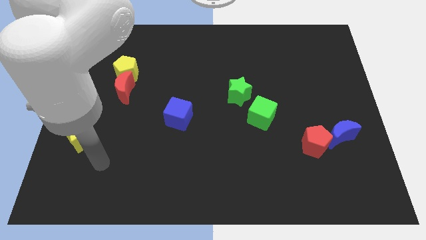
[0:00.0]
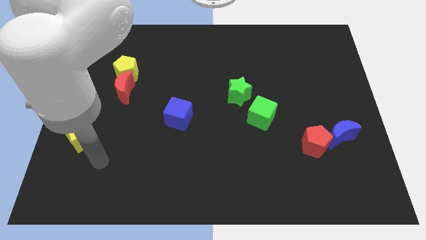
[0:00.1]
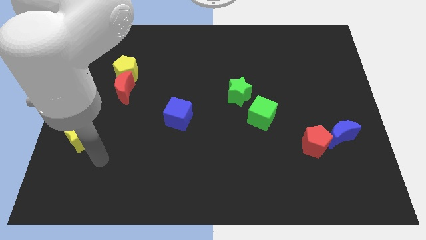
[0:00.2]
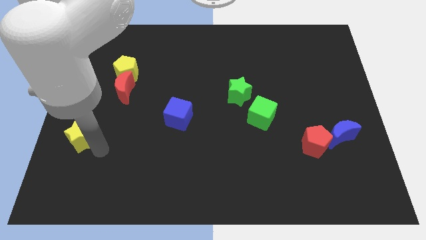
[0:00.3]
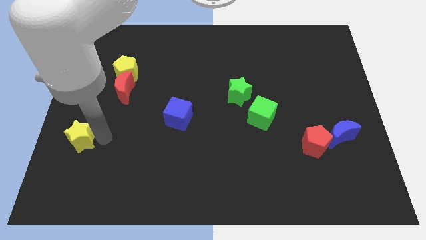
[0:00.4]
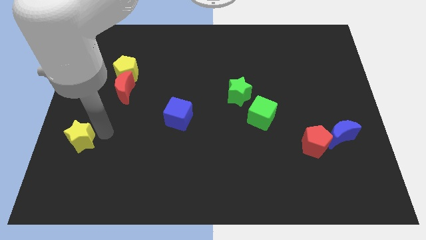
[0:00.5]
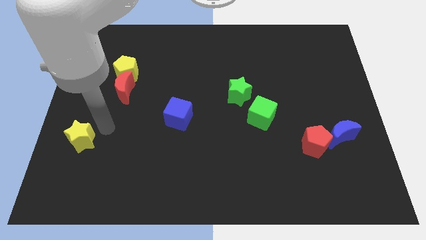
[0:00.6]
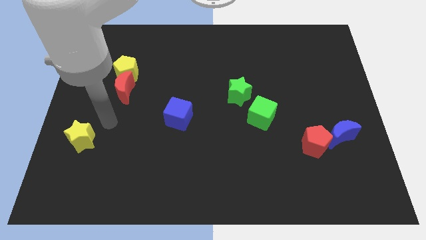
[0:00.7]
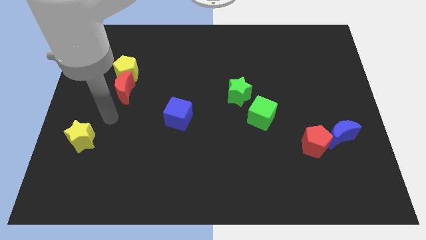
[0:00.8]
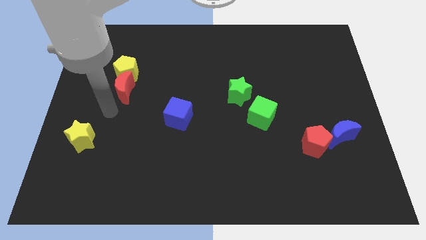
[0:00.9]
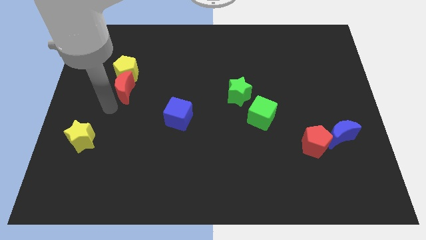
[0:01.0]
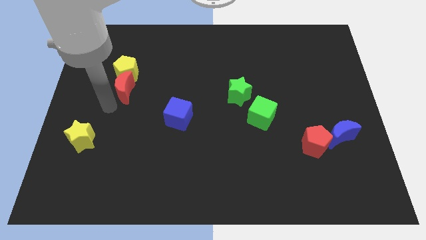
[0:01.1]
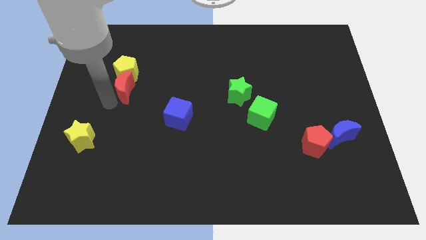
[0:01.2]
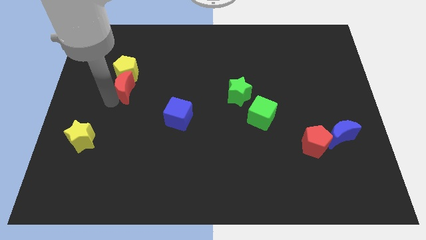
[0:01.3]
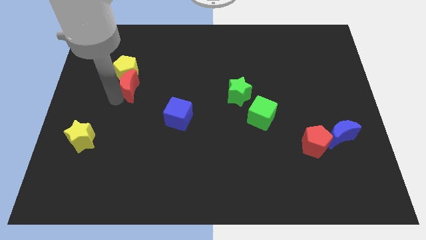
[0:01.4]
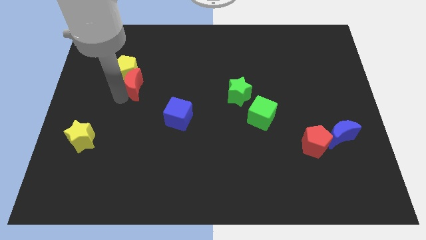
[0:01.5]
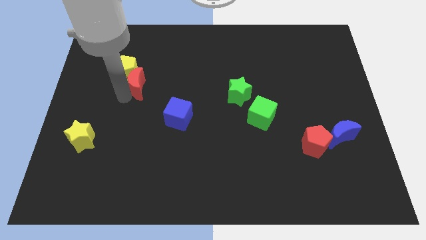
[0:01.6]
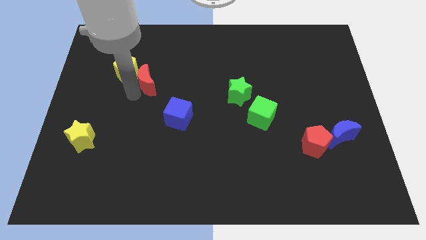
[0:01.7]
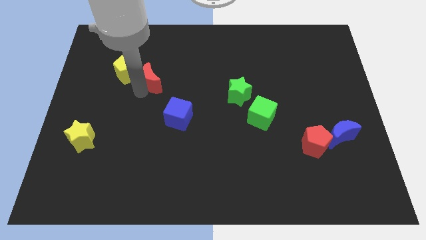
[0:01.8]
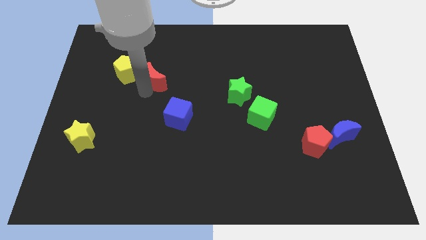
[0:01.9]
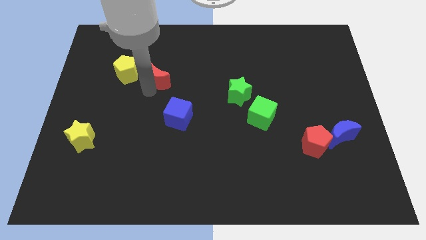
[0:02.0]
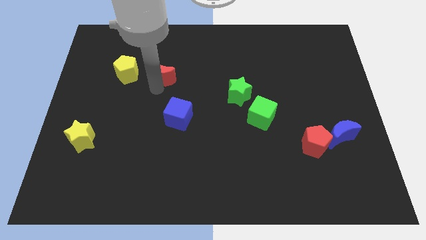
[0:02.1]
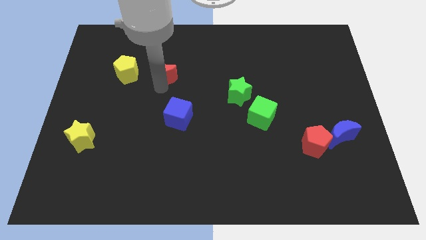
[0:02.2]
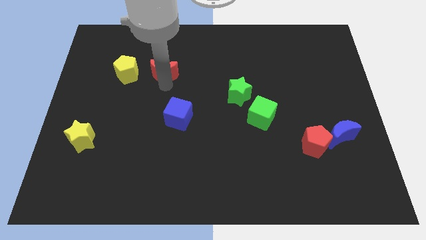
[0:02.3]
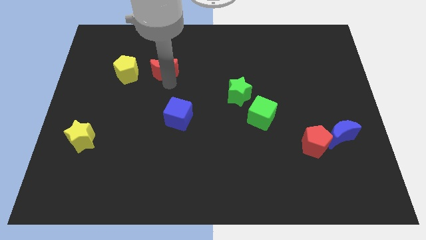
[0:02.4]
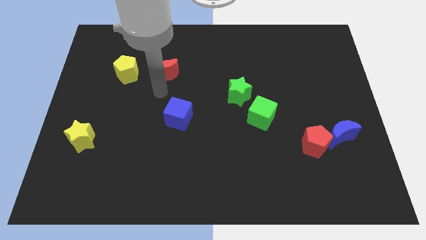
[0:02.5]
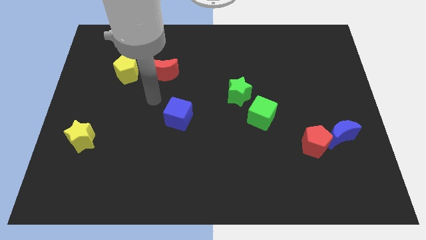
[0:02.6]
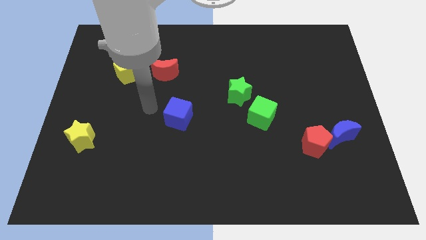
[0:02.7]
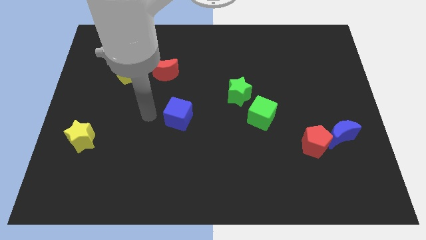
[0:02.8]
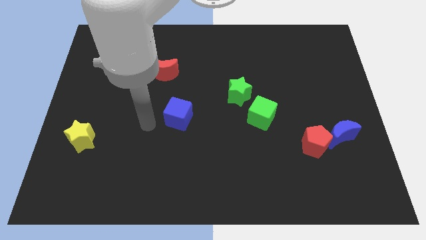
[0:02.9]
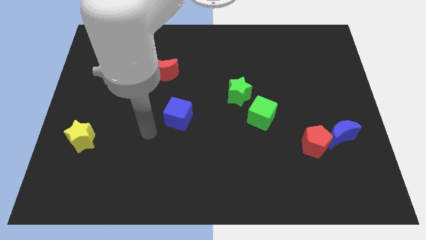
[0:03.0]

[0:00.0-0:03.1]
place the red moon right to the yellow pentagon

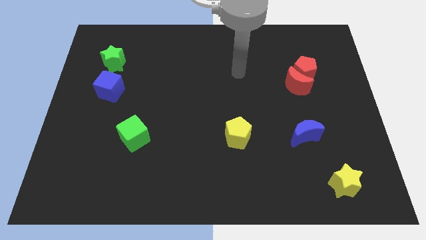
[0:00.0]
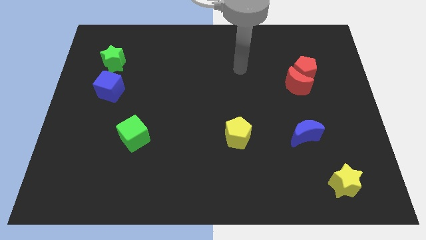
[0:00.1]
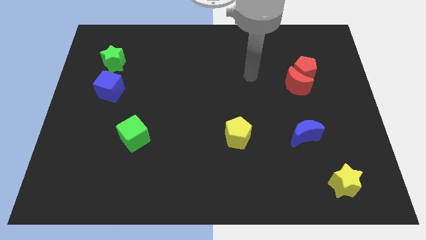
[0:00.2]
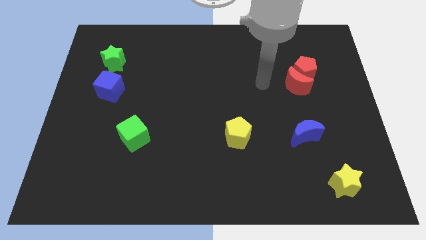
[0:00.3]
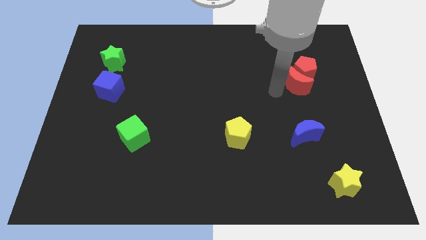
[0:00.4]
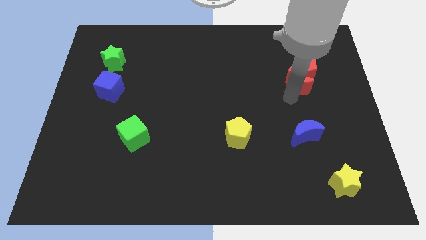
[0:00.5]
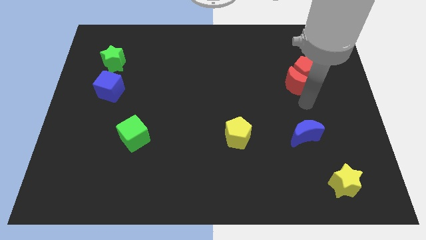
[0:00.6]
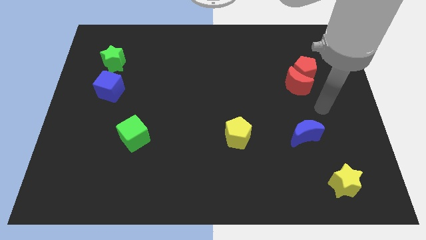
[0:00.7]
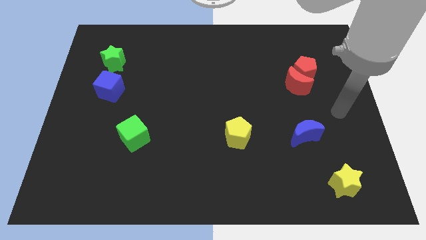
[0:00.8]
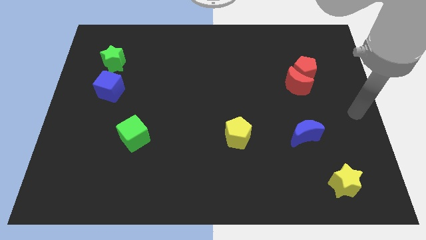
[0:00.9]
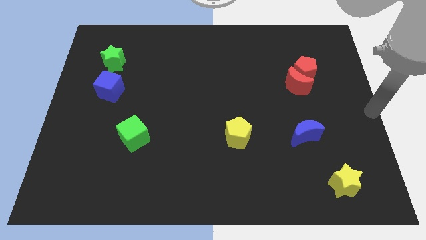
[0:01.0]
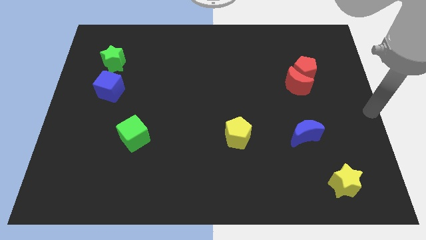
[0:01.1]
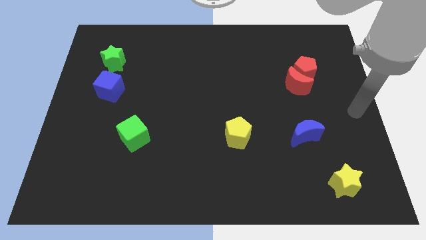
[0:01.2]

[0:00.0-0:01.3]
move your arm to the right center of the board

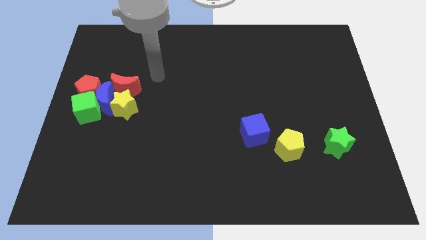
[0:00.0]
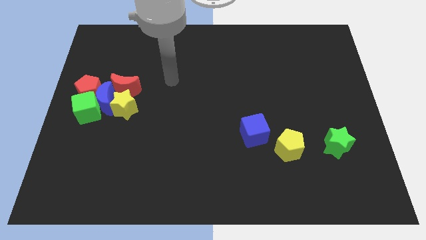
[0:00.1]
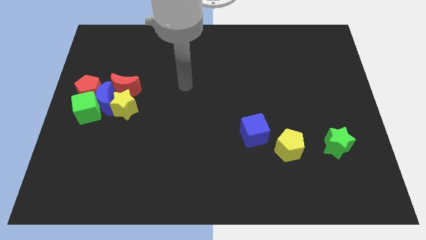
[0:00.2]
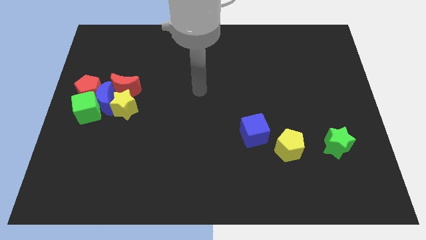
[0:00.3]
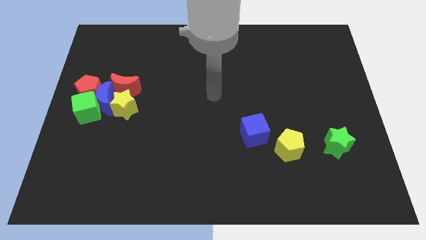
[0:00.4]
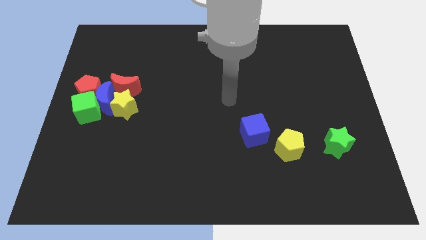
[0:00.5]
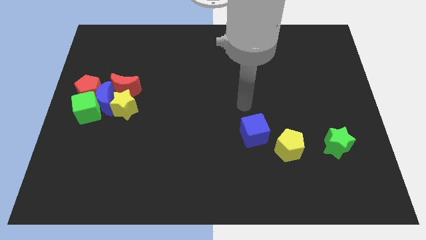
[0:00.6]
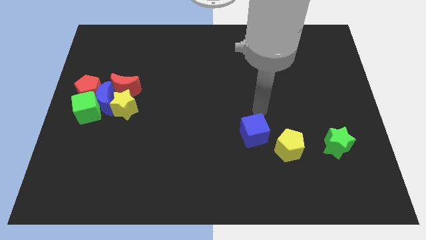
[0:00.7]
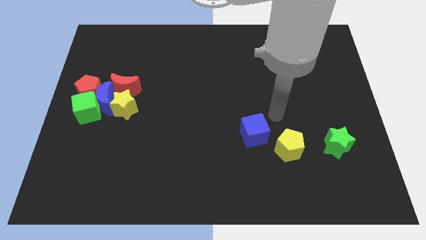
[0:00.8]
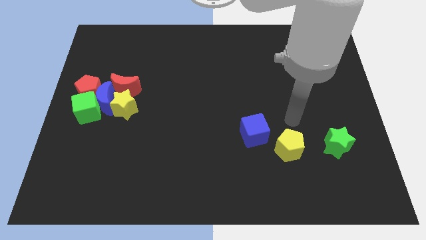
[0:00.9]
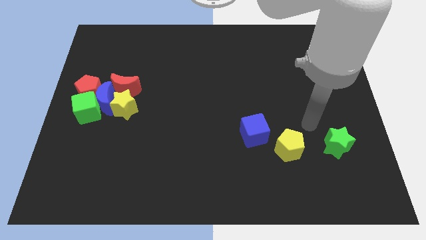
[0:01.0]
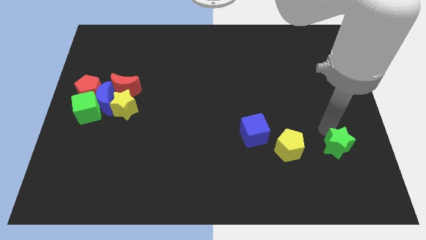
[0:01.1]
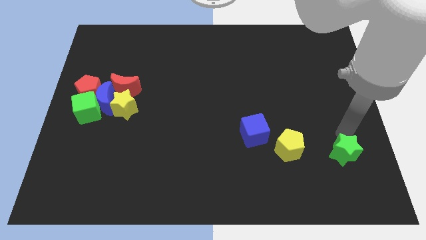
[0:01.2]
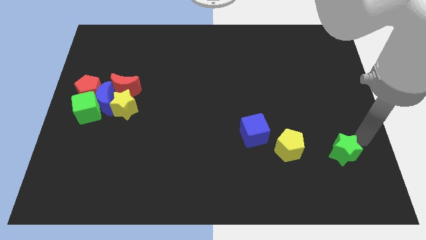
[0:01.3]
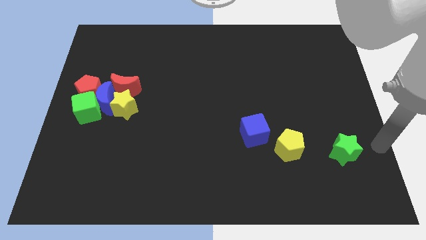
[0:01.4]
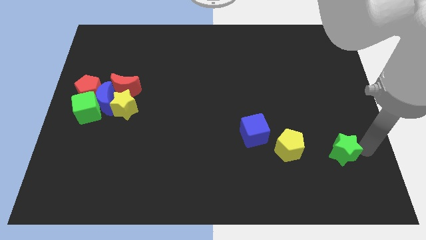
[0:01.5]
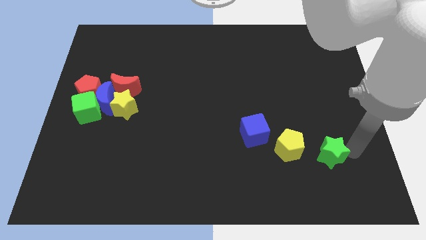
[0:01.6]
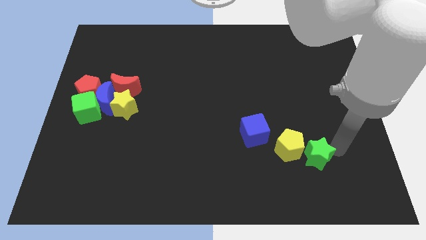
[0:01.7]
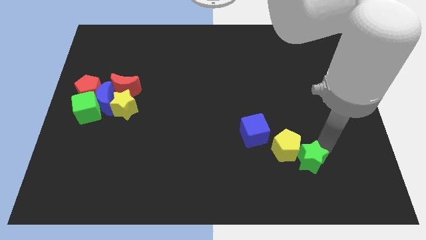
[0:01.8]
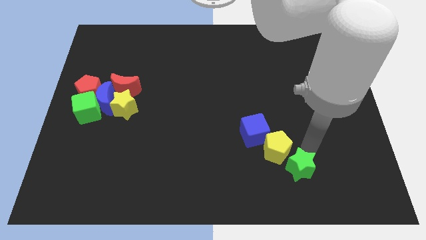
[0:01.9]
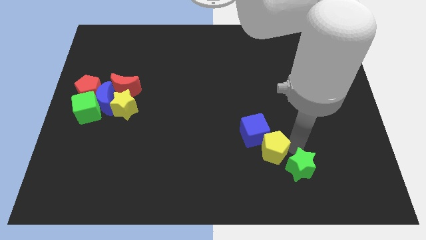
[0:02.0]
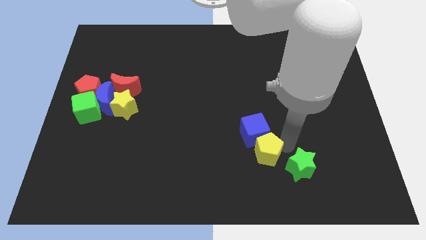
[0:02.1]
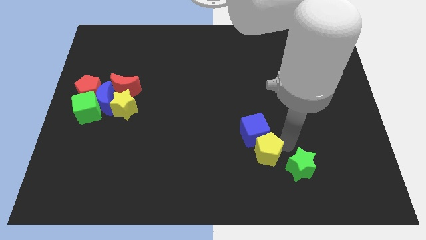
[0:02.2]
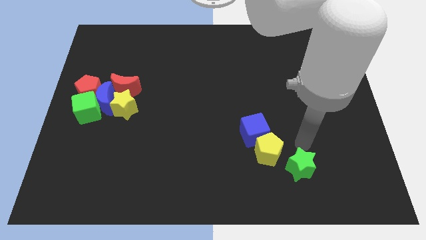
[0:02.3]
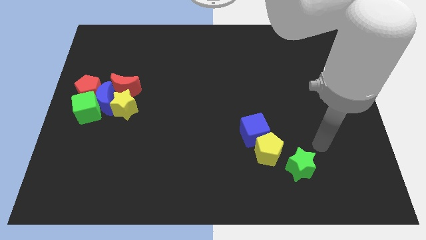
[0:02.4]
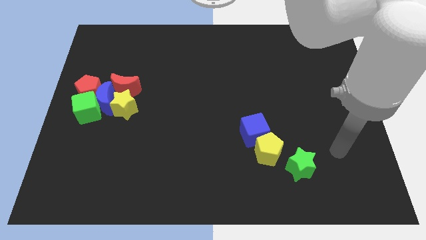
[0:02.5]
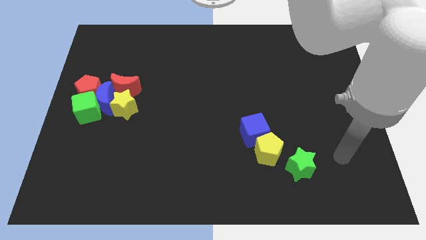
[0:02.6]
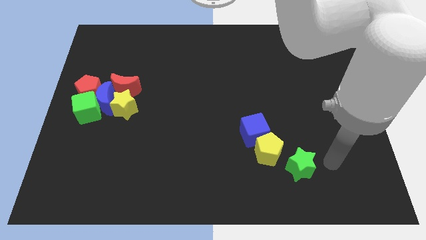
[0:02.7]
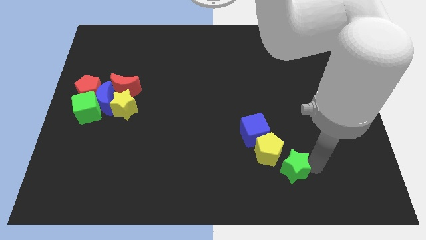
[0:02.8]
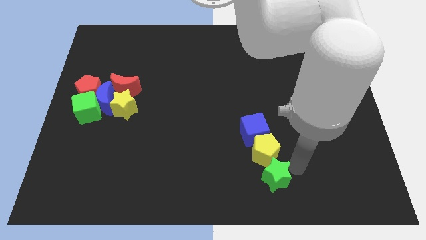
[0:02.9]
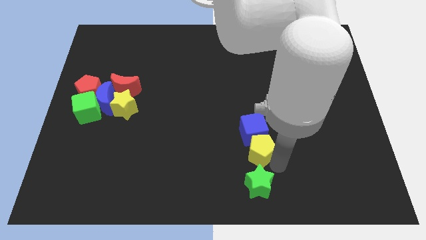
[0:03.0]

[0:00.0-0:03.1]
move the green star and the yellow pentagon below the blue cube

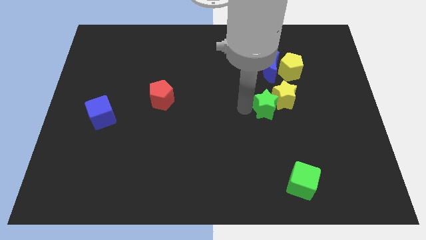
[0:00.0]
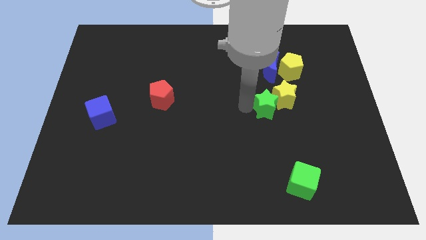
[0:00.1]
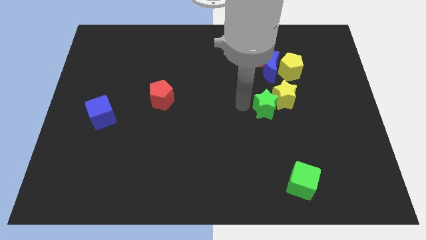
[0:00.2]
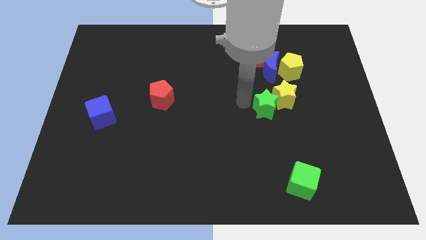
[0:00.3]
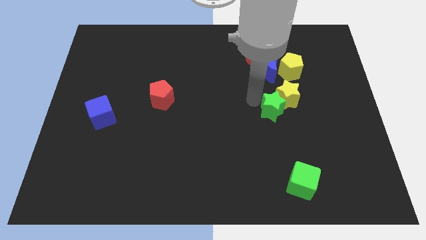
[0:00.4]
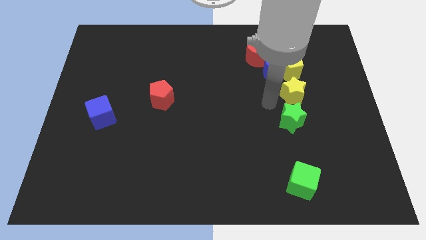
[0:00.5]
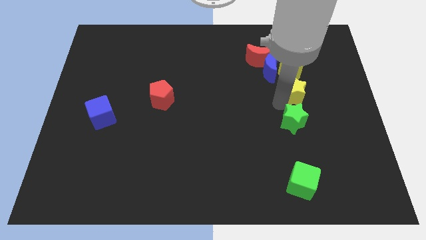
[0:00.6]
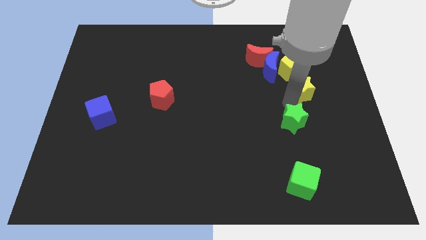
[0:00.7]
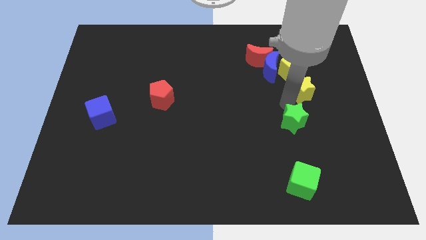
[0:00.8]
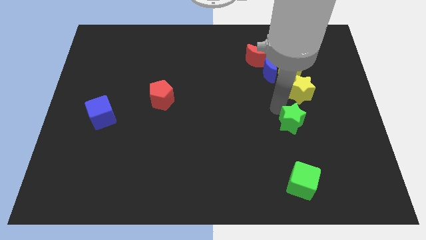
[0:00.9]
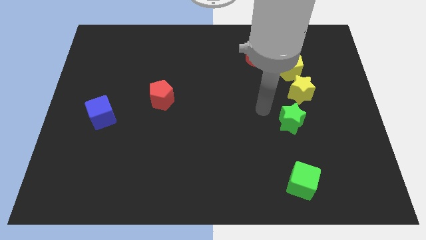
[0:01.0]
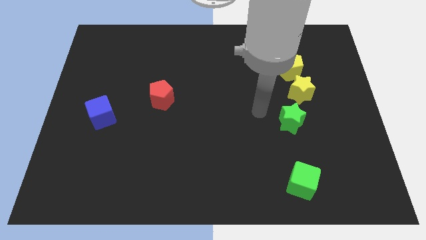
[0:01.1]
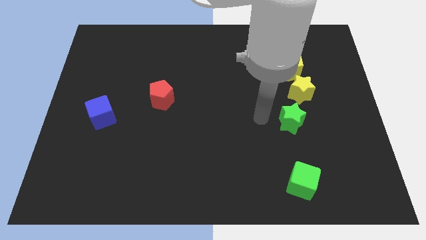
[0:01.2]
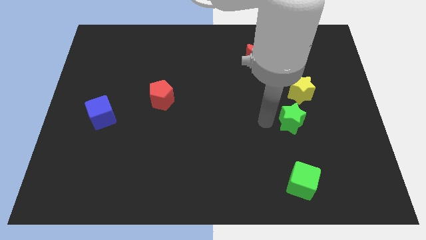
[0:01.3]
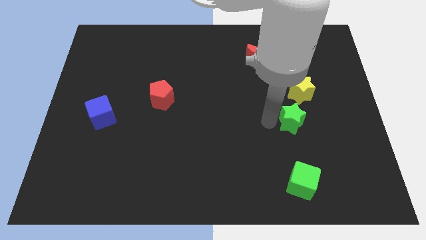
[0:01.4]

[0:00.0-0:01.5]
push the yellow star to the bottom right side of the yellow pentagon
